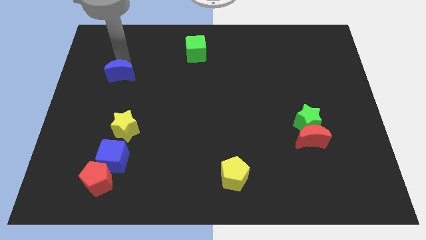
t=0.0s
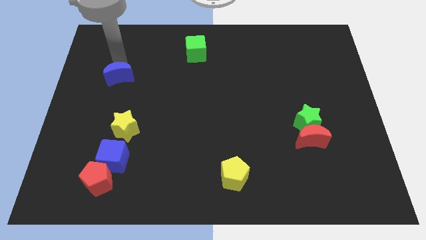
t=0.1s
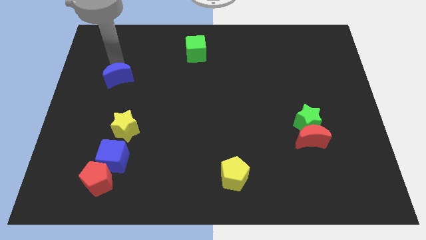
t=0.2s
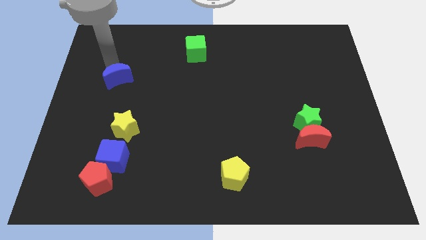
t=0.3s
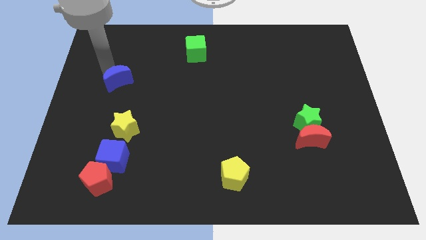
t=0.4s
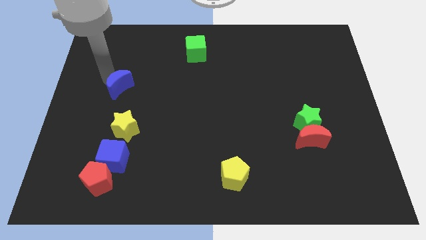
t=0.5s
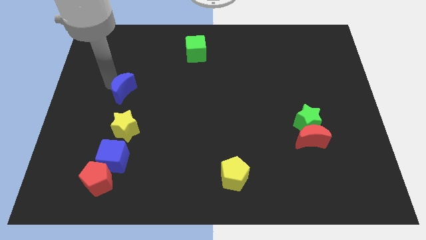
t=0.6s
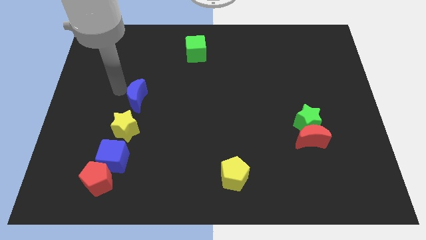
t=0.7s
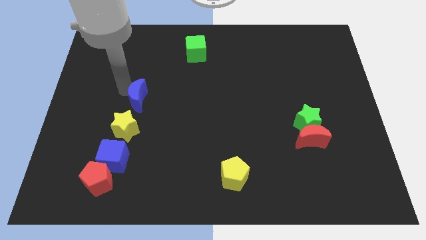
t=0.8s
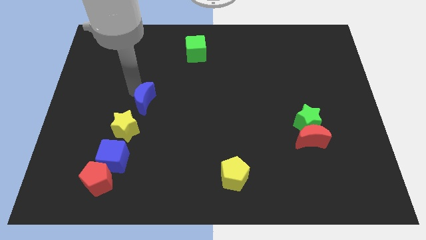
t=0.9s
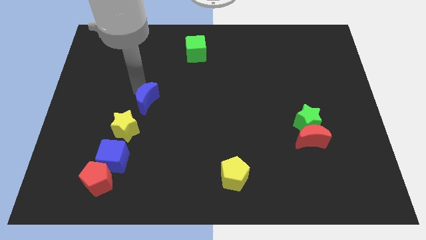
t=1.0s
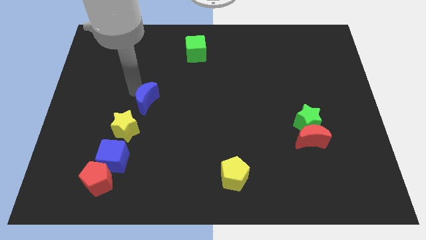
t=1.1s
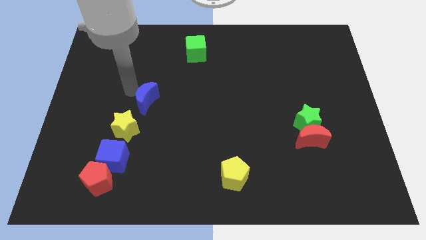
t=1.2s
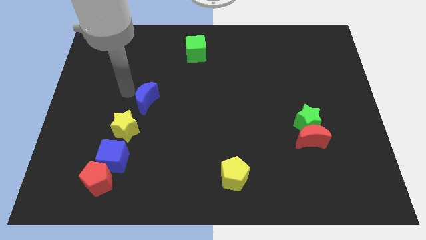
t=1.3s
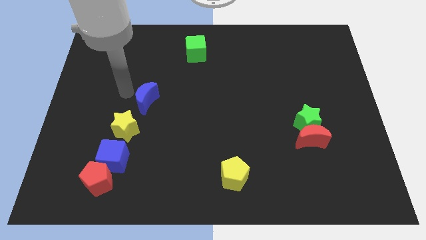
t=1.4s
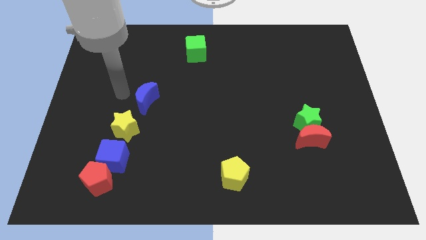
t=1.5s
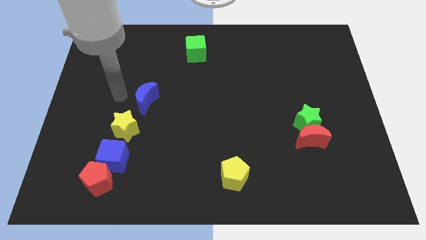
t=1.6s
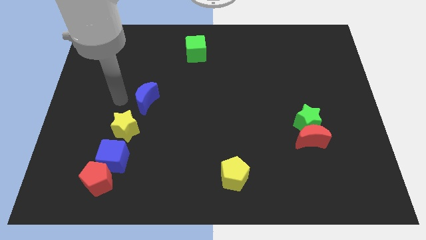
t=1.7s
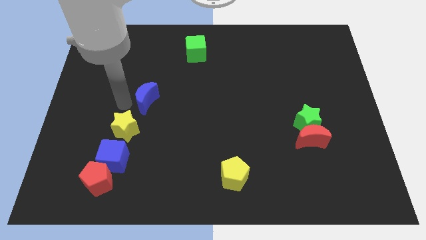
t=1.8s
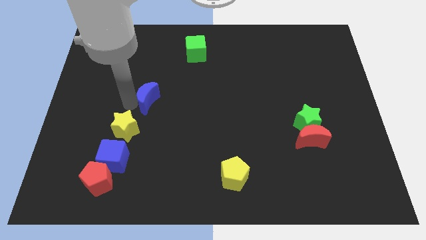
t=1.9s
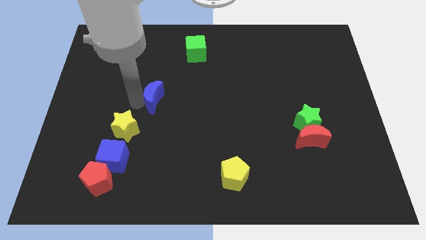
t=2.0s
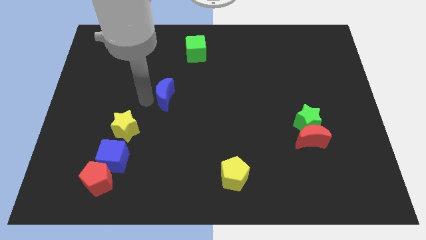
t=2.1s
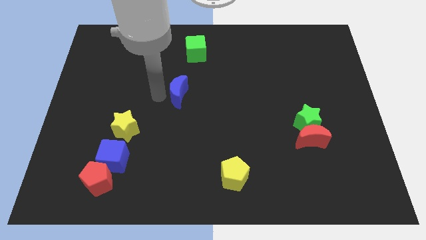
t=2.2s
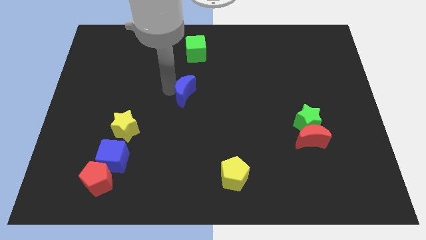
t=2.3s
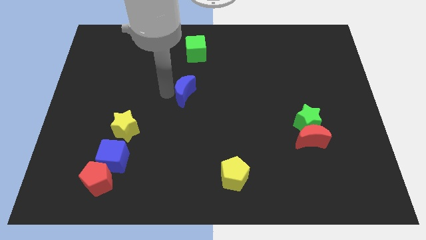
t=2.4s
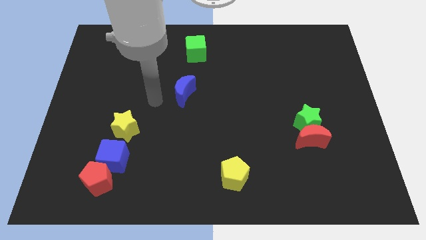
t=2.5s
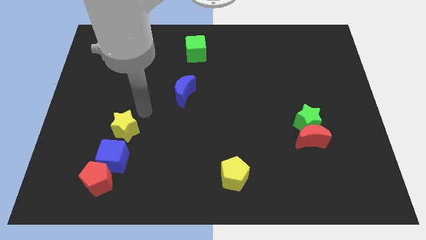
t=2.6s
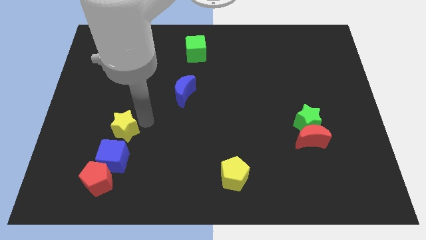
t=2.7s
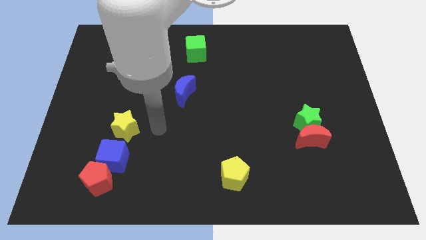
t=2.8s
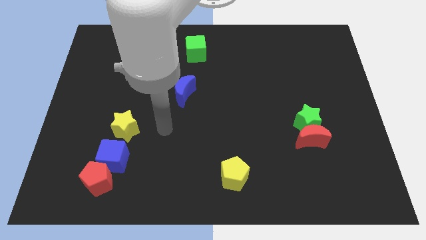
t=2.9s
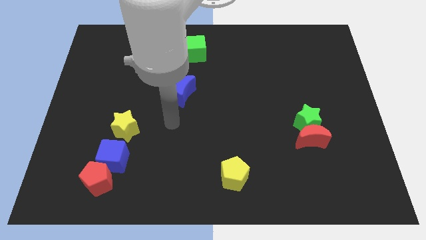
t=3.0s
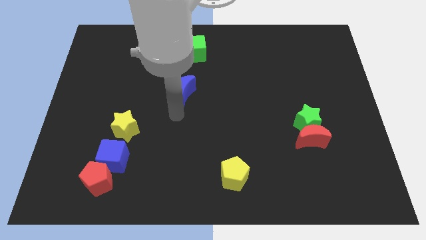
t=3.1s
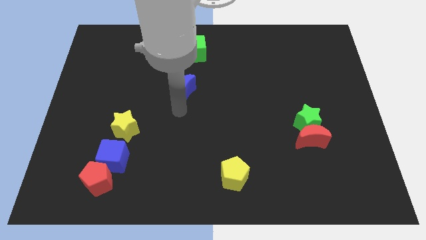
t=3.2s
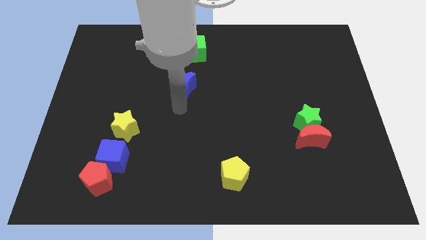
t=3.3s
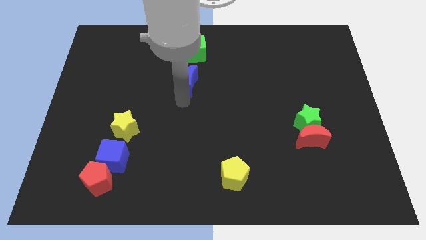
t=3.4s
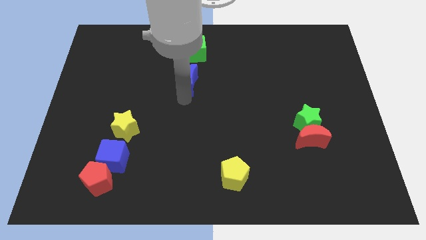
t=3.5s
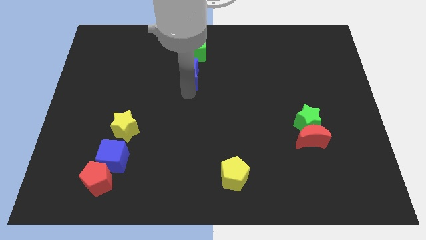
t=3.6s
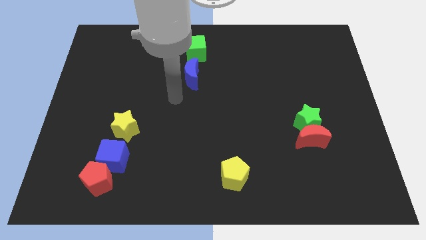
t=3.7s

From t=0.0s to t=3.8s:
move the blue moon below into the green cube

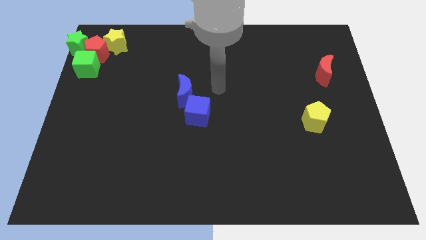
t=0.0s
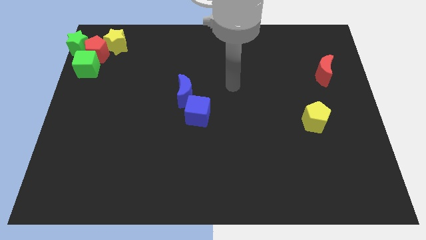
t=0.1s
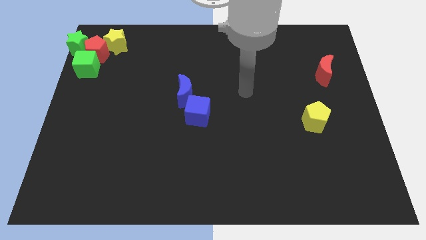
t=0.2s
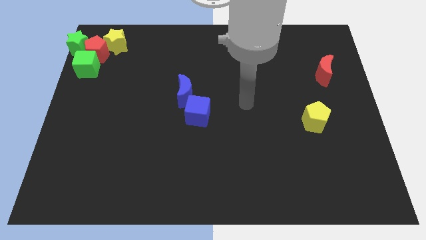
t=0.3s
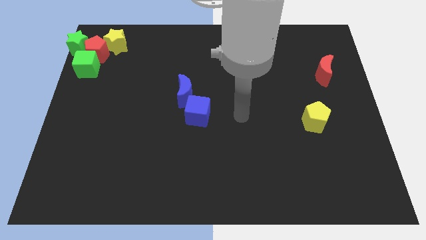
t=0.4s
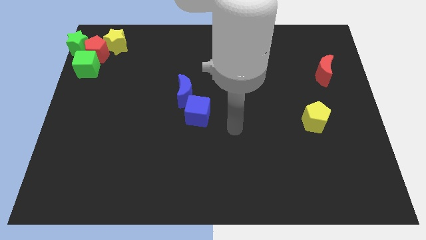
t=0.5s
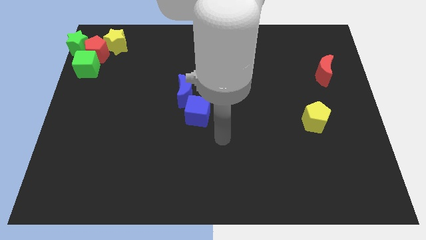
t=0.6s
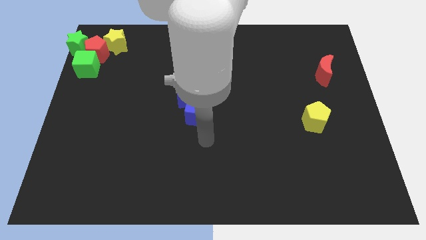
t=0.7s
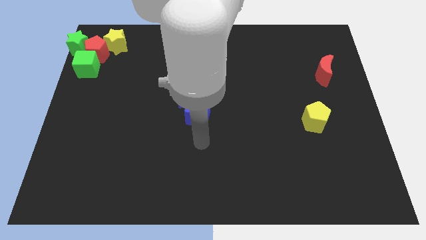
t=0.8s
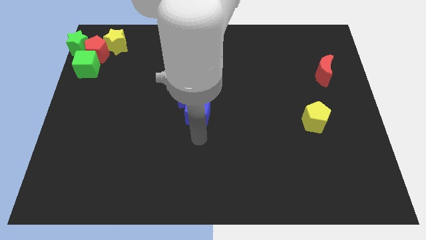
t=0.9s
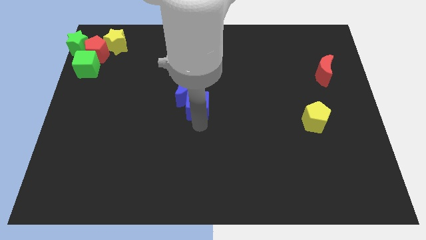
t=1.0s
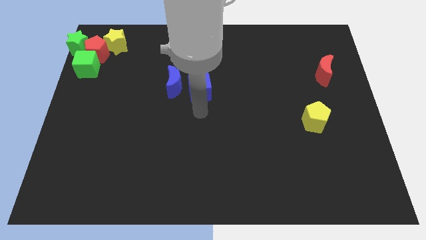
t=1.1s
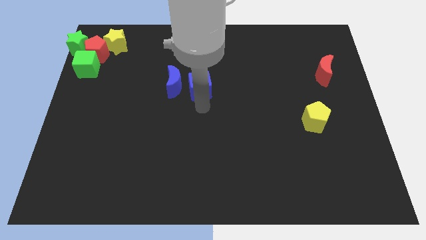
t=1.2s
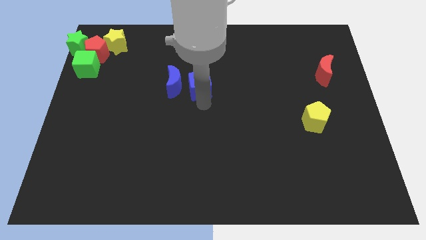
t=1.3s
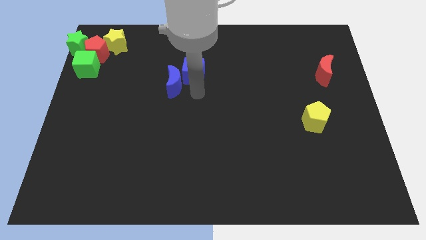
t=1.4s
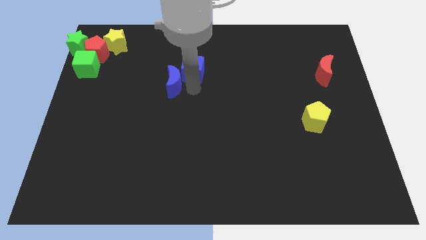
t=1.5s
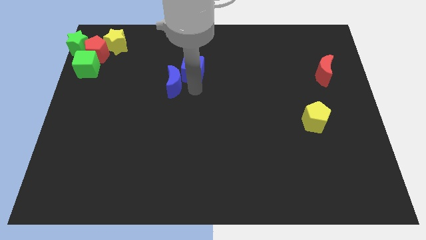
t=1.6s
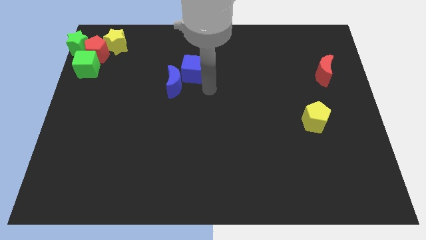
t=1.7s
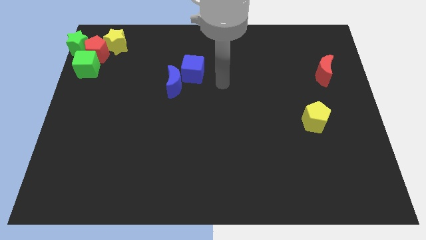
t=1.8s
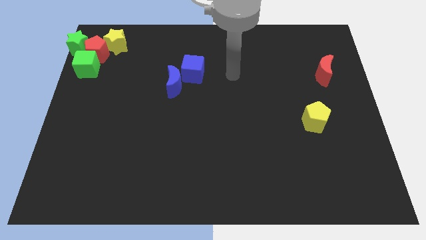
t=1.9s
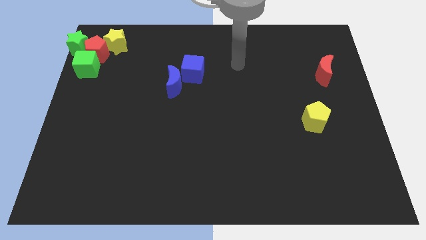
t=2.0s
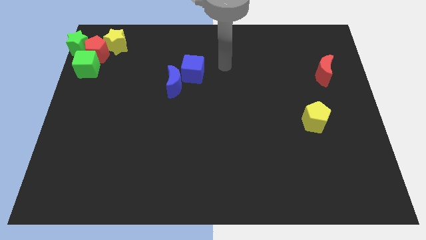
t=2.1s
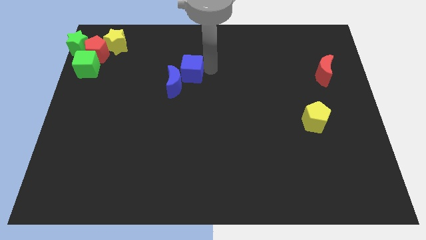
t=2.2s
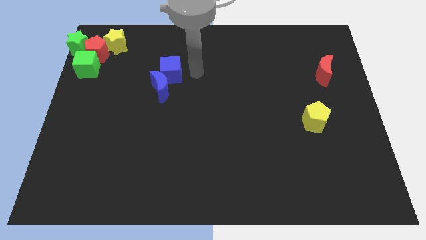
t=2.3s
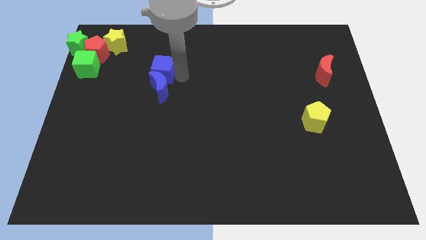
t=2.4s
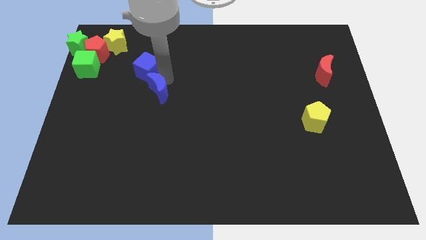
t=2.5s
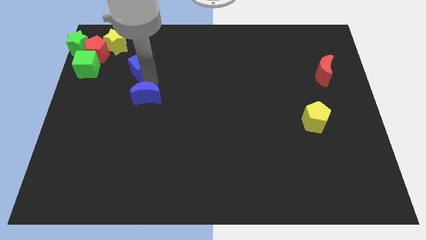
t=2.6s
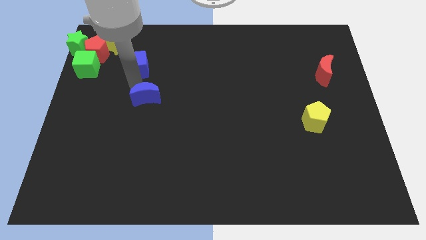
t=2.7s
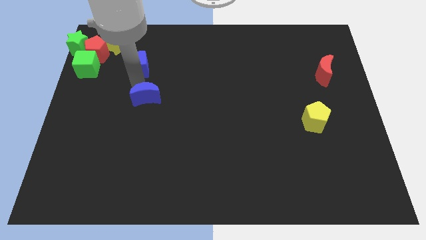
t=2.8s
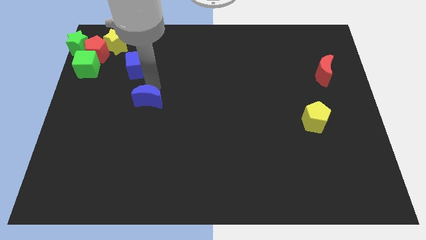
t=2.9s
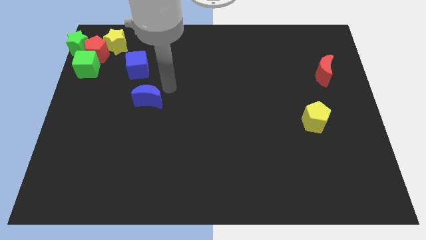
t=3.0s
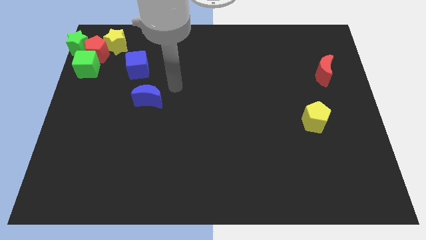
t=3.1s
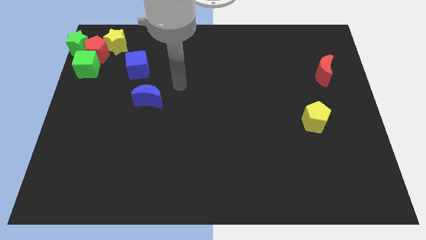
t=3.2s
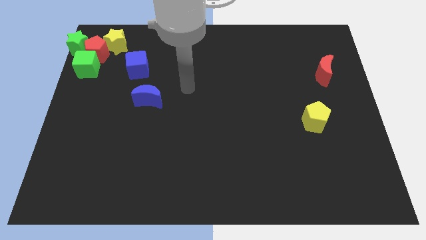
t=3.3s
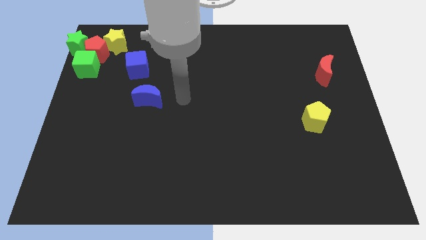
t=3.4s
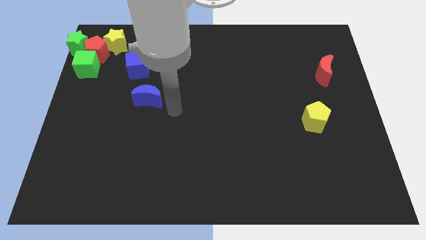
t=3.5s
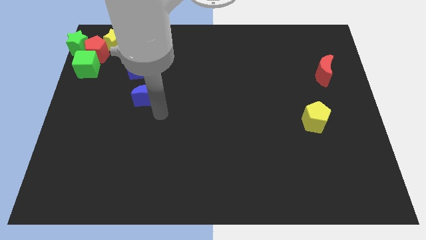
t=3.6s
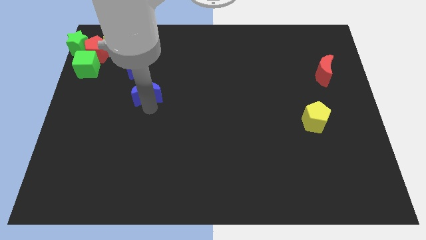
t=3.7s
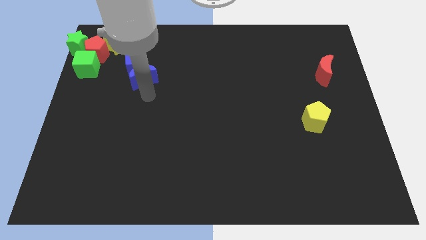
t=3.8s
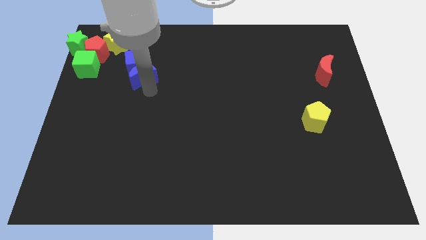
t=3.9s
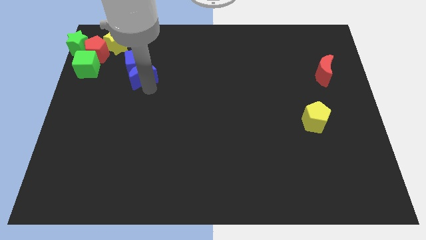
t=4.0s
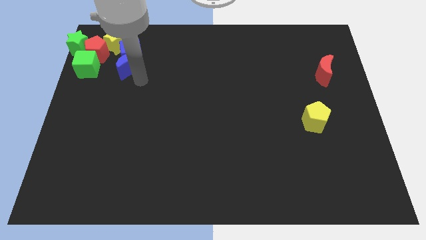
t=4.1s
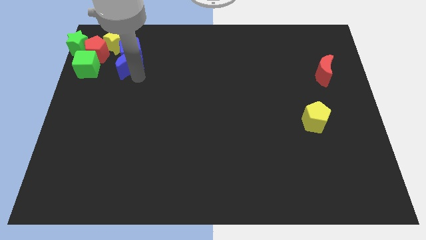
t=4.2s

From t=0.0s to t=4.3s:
move the blue crescent along with the blue cube towards the yellow star

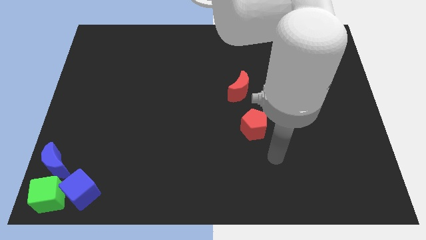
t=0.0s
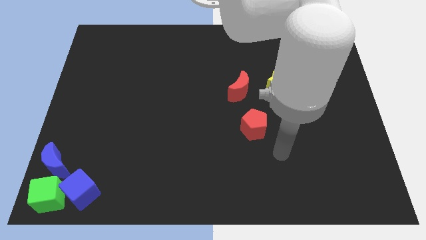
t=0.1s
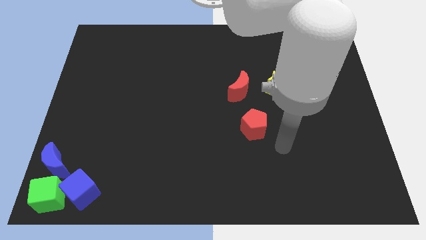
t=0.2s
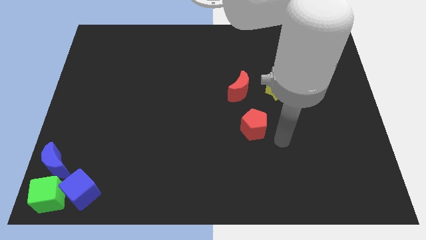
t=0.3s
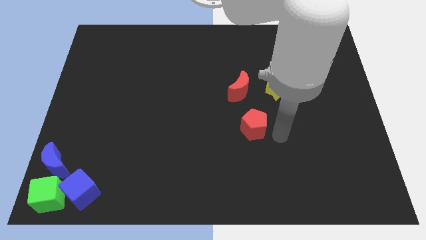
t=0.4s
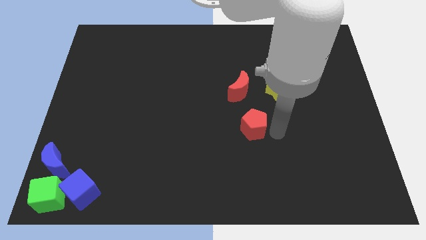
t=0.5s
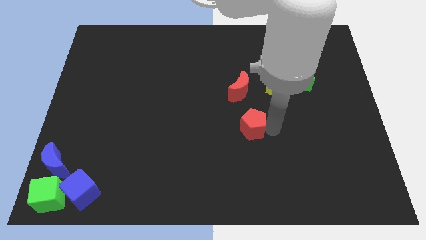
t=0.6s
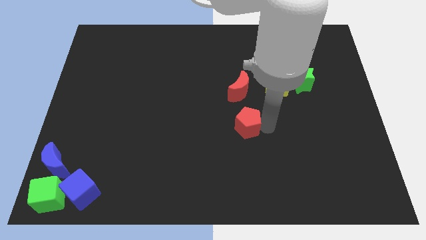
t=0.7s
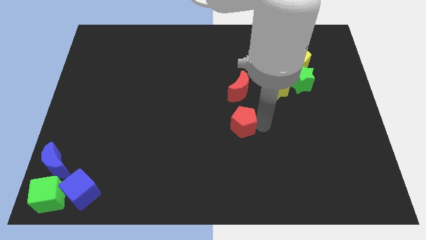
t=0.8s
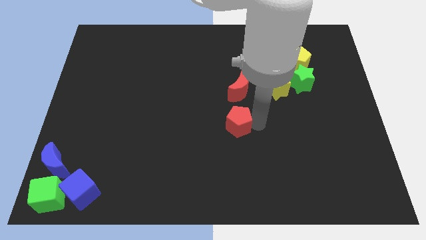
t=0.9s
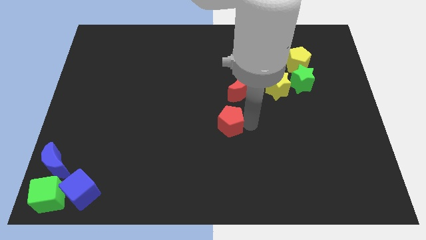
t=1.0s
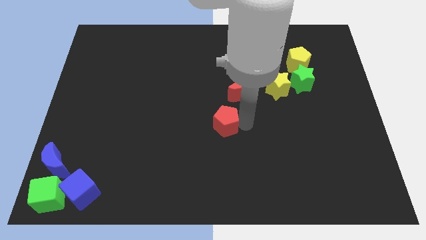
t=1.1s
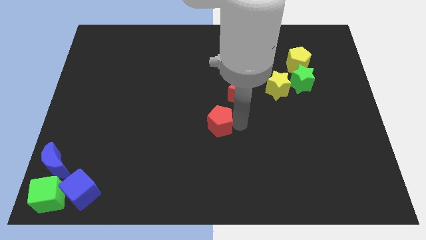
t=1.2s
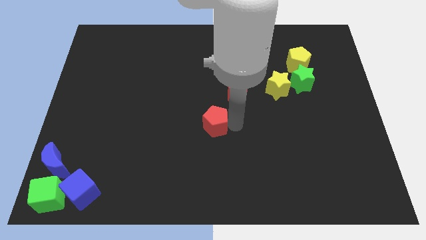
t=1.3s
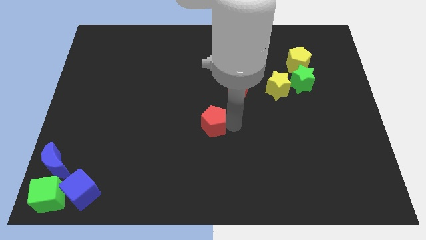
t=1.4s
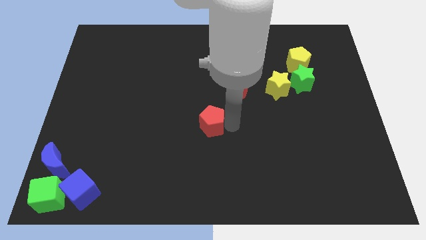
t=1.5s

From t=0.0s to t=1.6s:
slide the red pentagon slightly to the left
